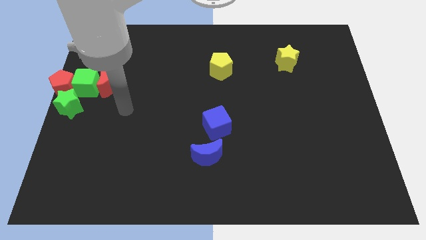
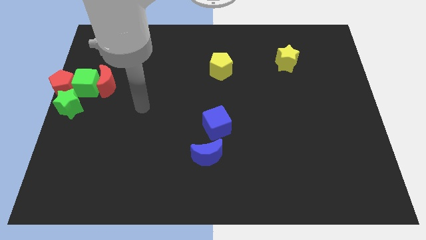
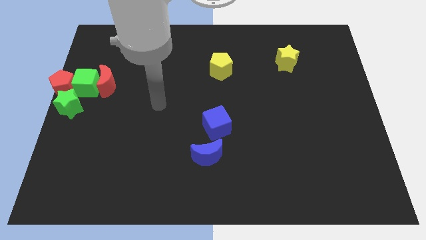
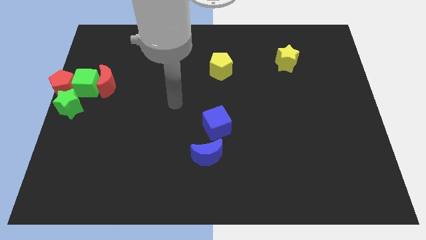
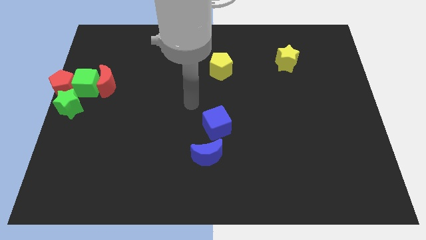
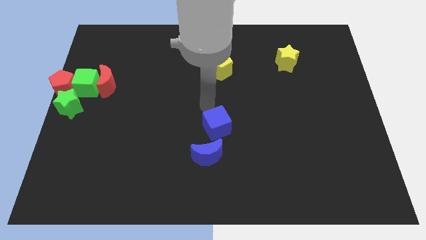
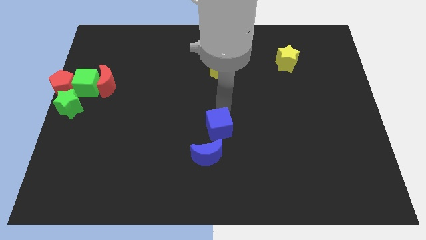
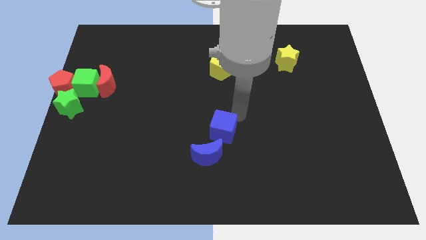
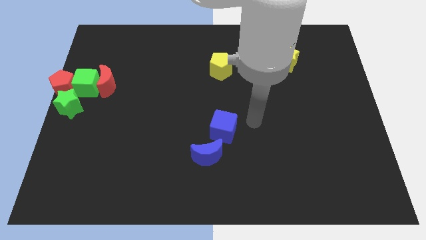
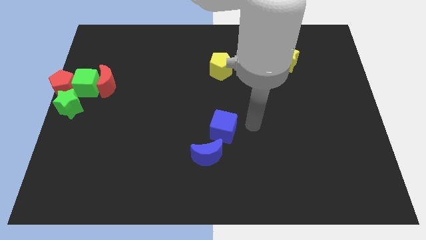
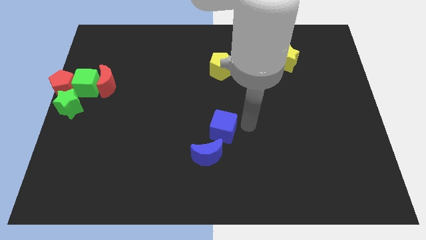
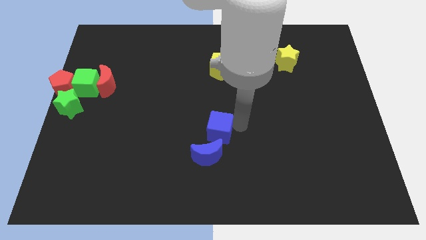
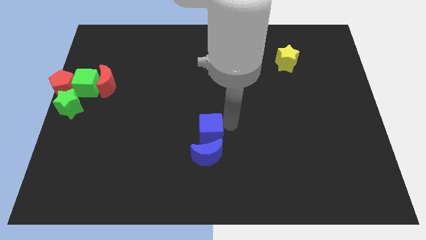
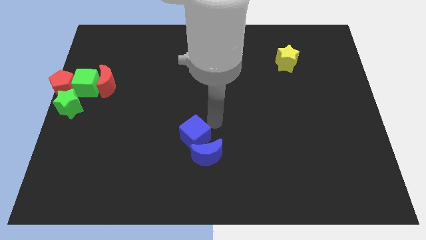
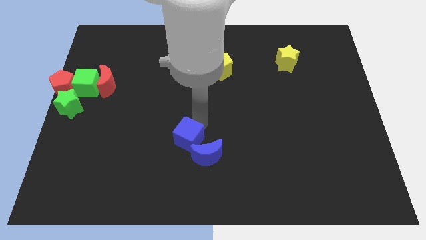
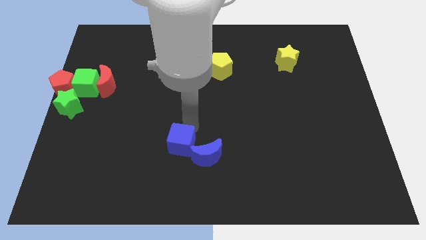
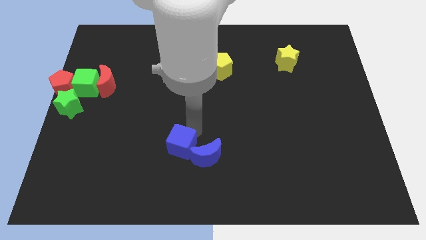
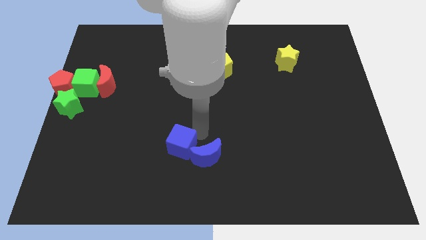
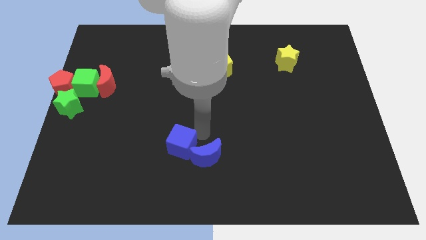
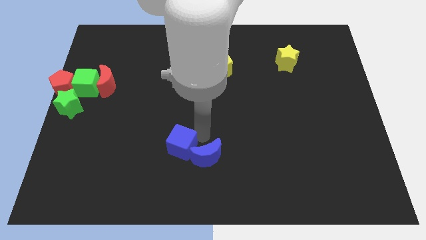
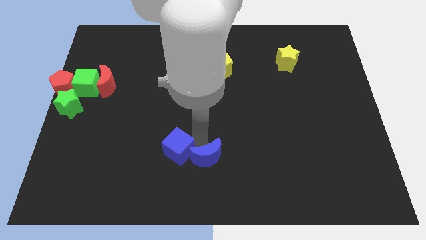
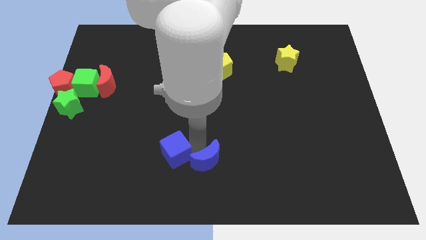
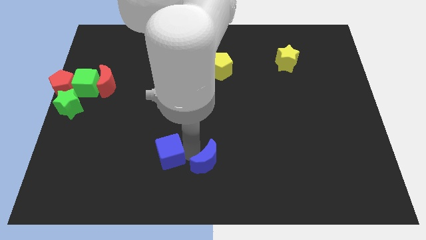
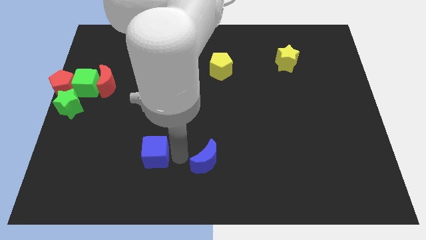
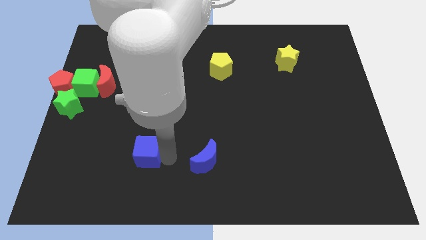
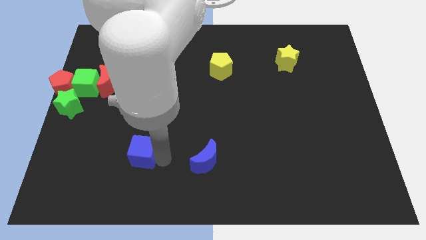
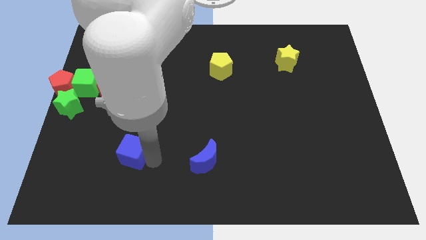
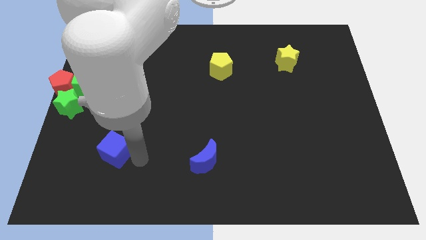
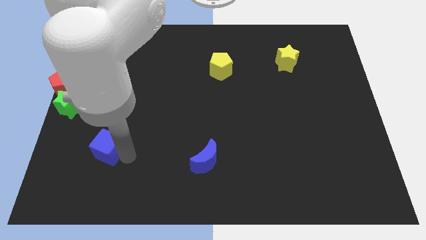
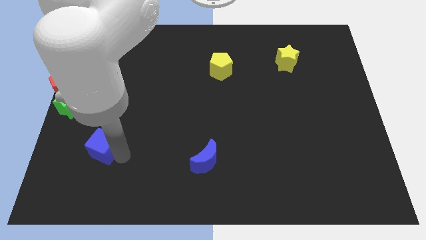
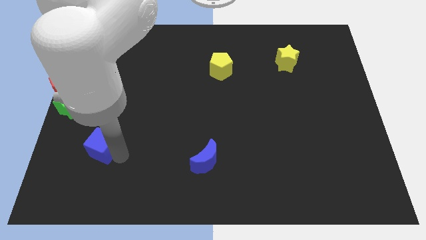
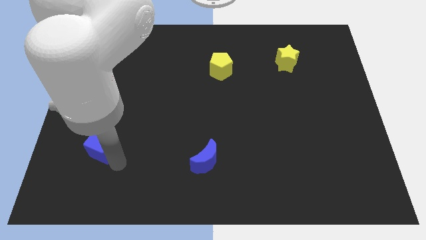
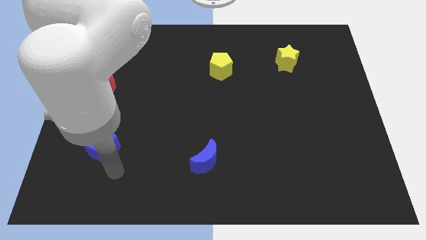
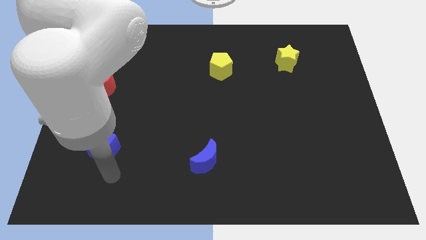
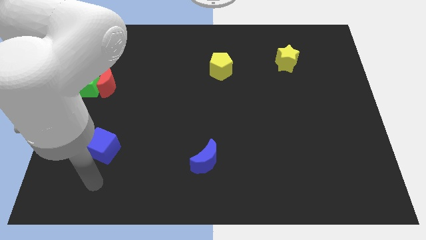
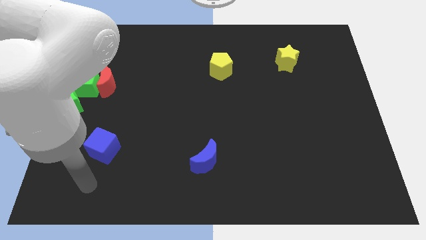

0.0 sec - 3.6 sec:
push the blue cube towards the left side of the board

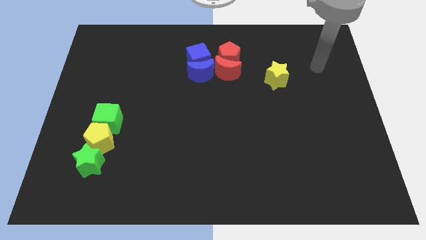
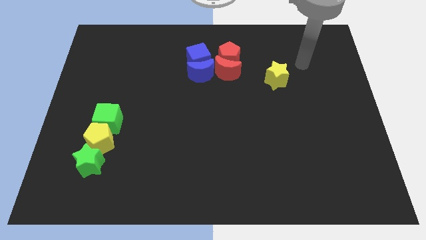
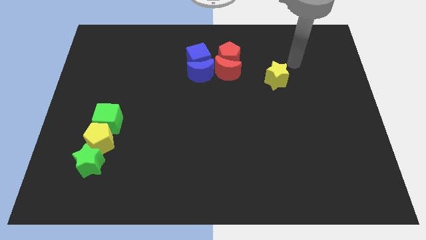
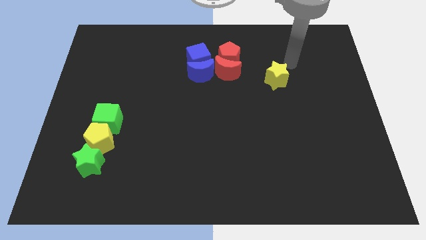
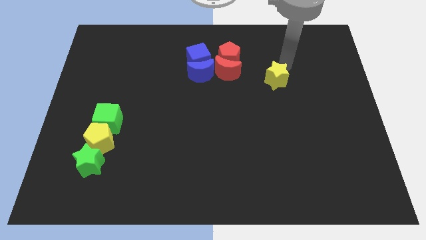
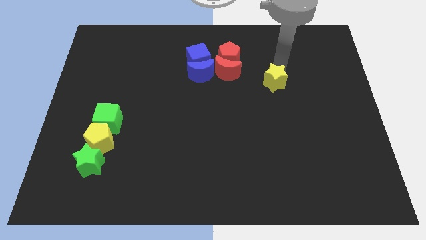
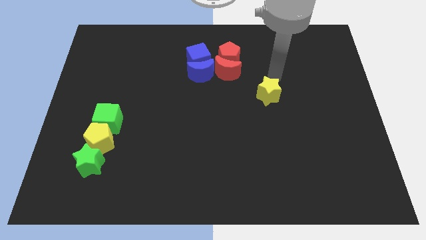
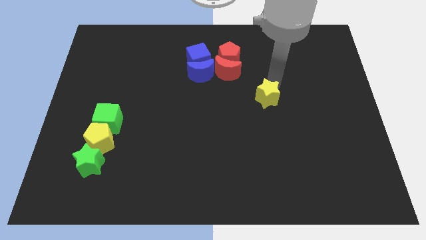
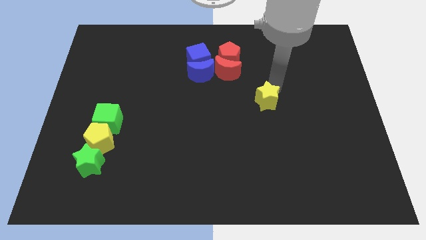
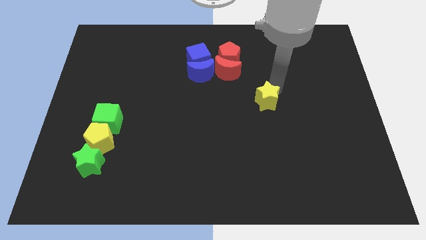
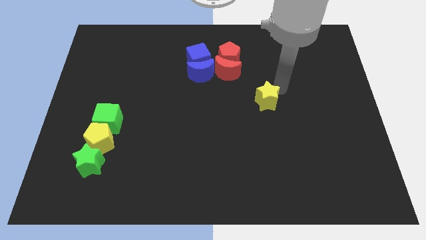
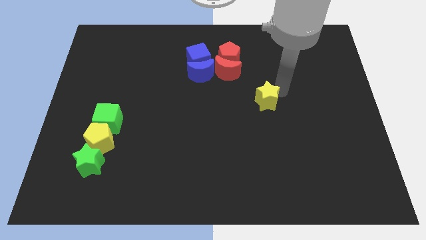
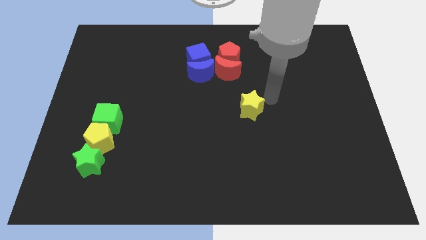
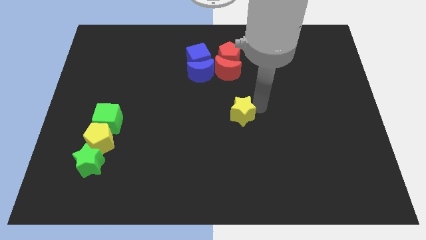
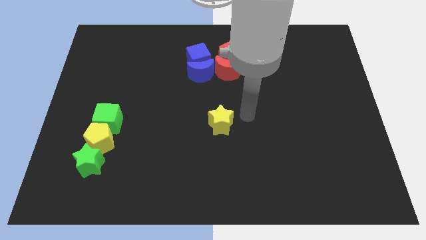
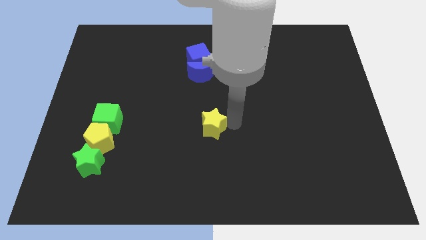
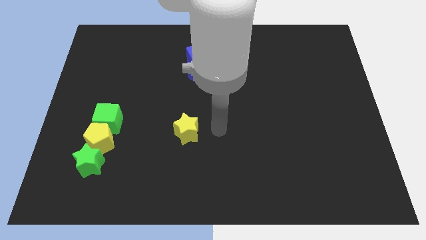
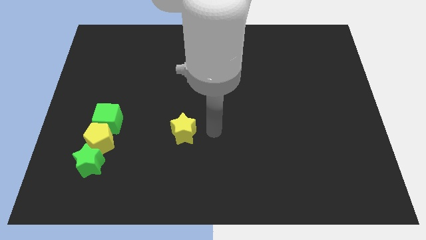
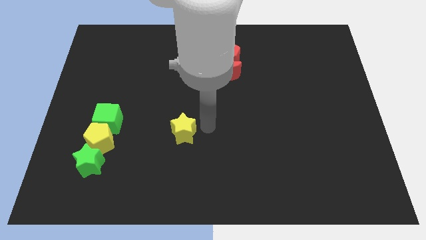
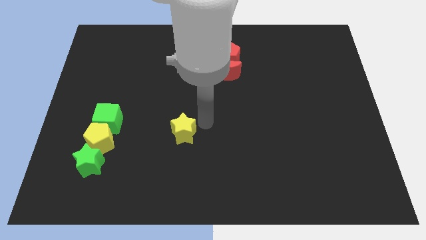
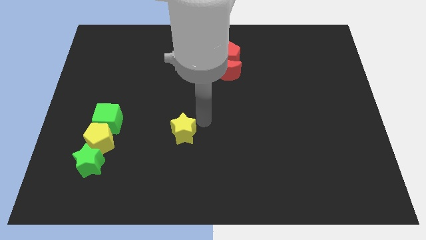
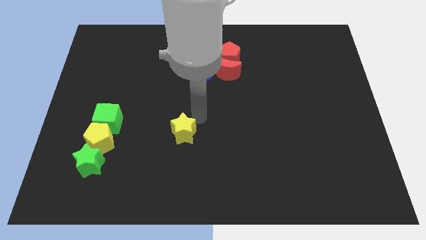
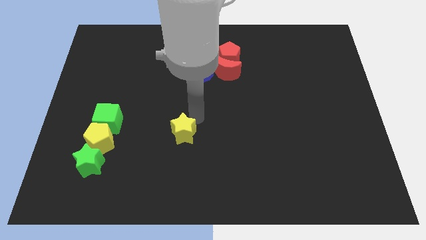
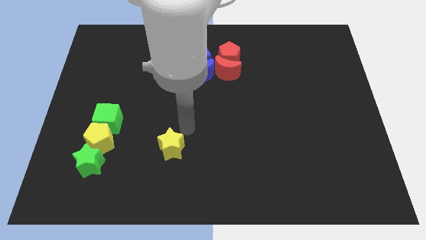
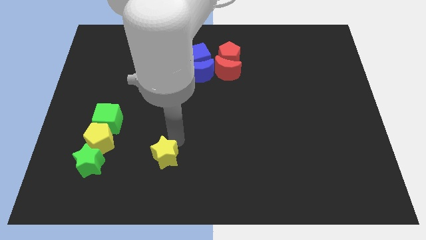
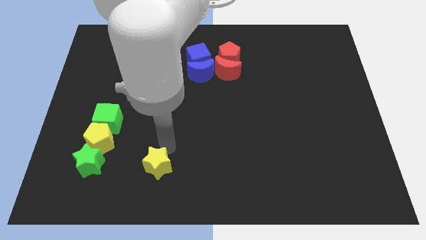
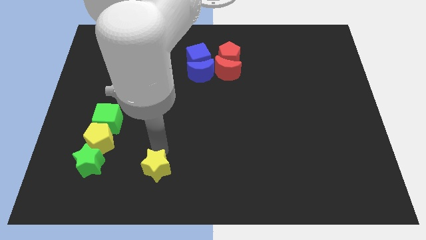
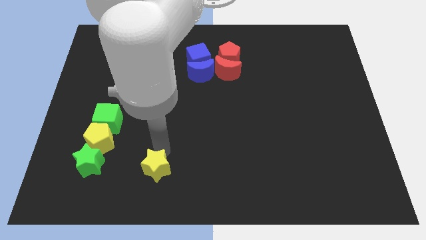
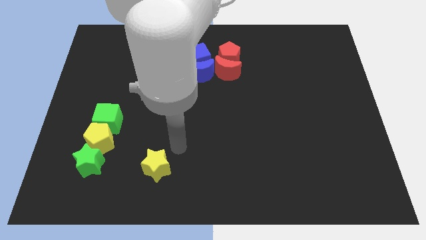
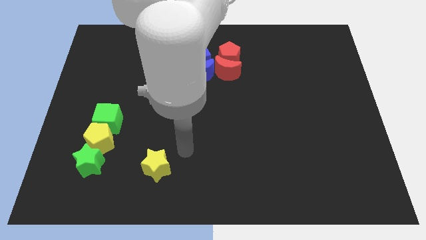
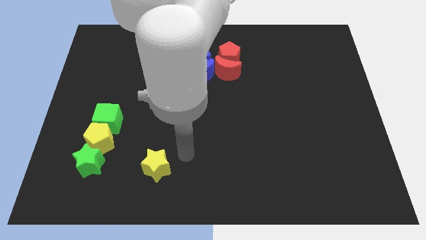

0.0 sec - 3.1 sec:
move yellow star towards the bottom left of the board

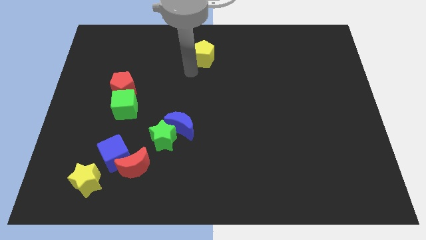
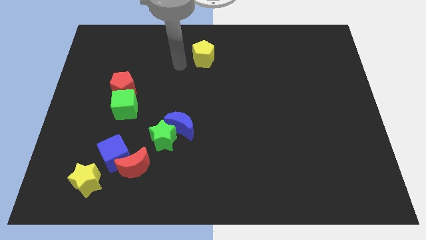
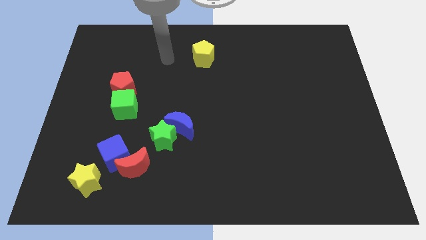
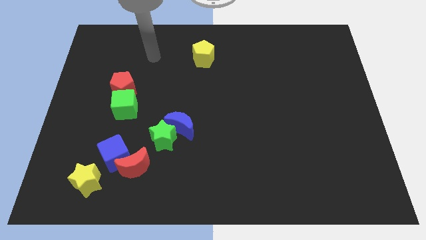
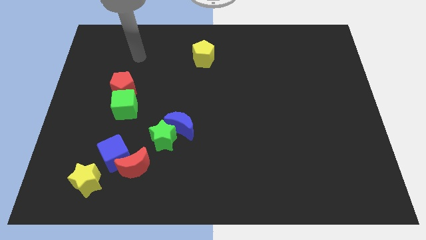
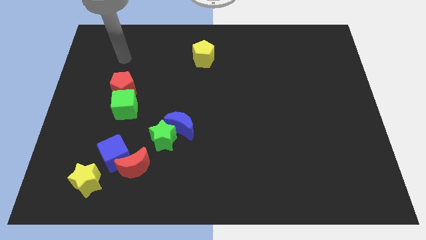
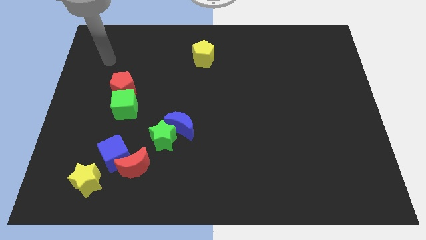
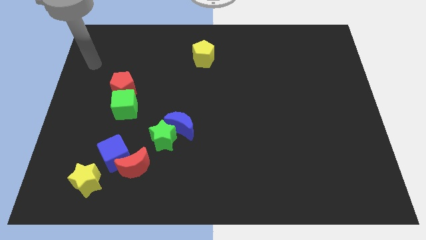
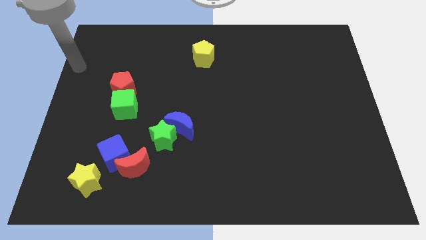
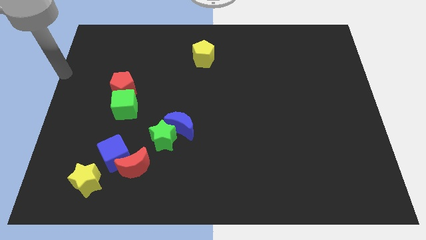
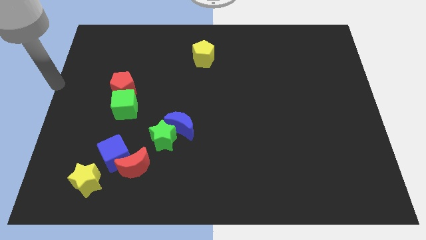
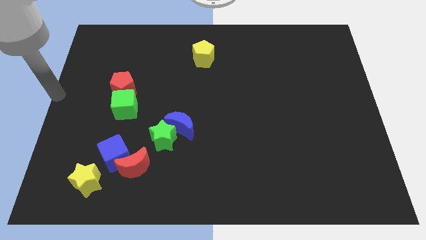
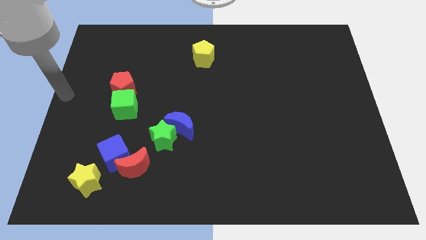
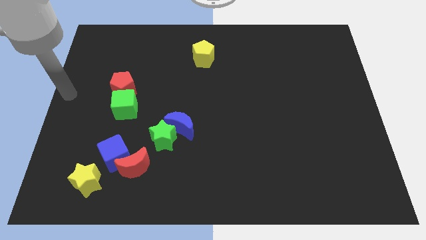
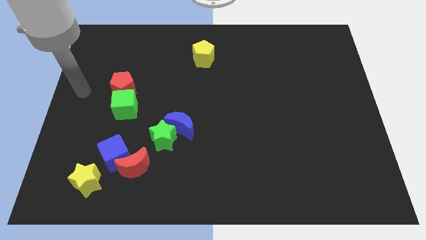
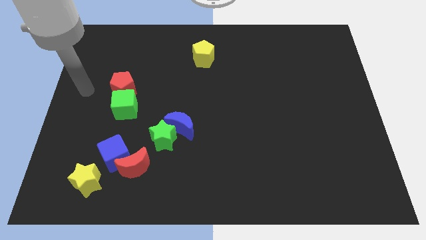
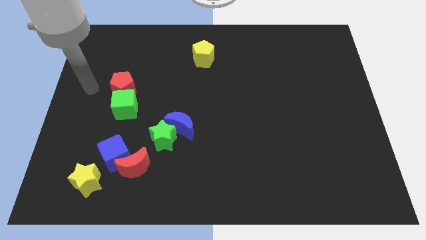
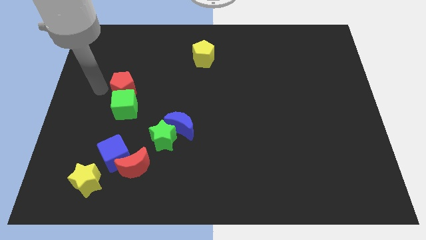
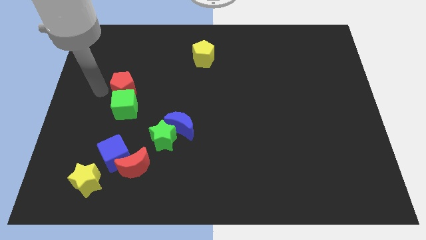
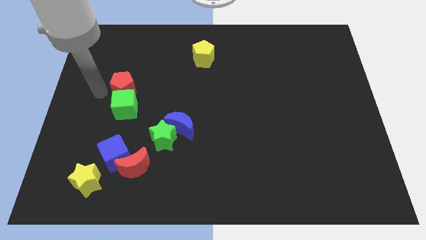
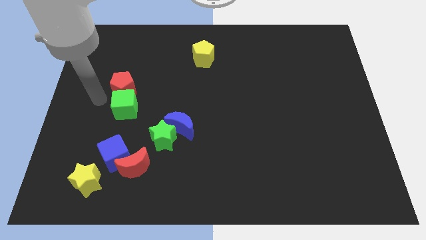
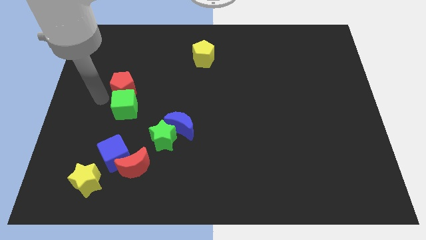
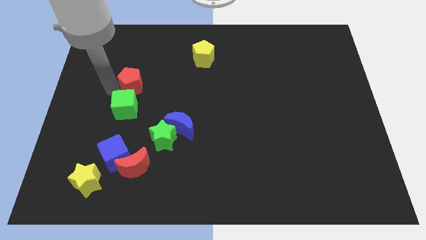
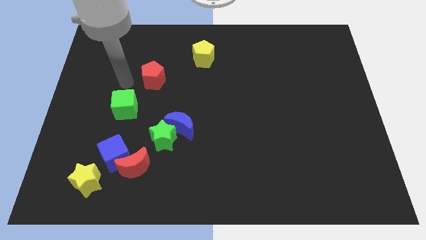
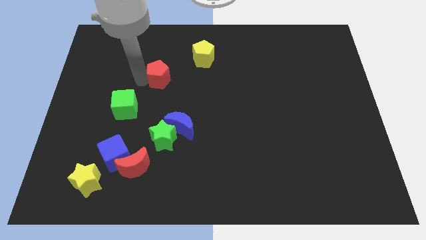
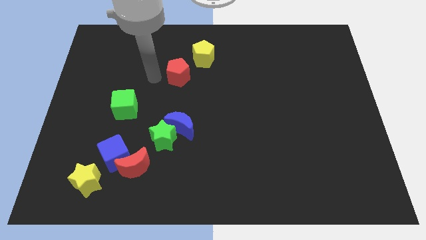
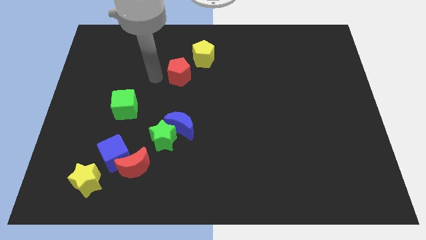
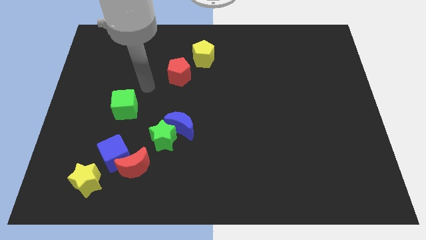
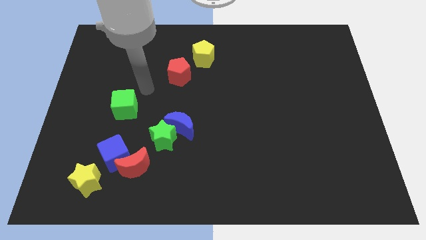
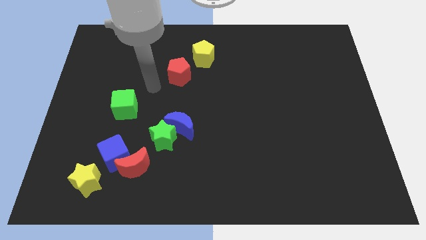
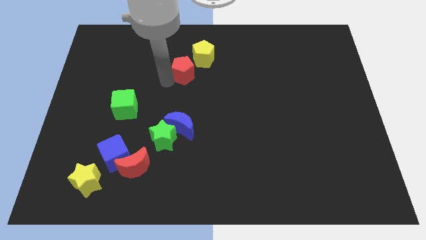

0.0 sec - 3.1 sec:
move the red pentagon to the bottom left of the yellow pentagon
